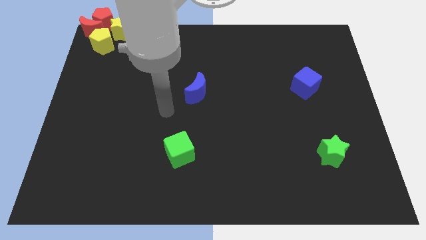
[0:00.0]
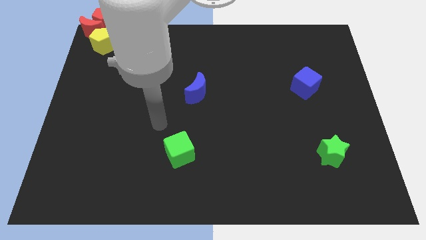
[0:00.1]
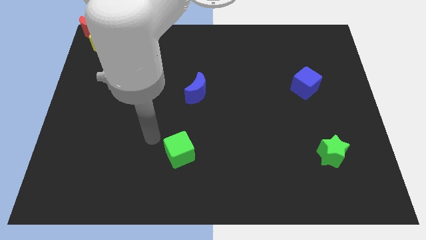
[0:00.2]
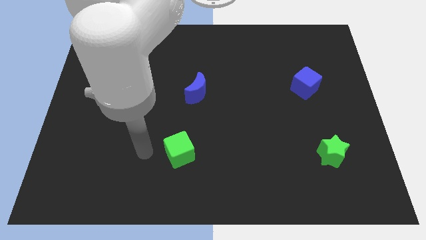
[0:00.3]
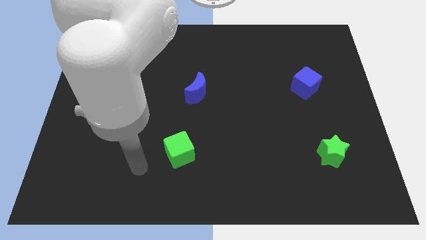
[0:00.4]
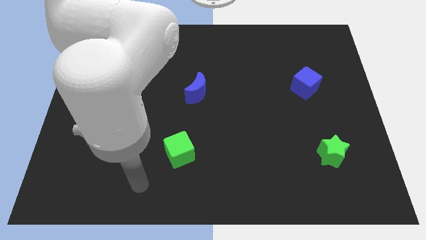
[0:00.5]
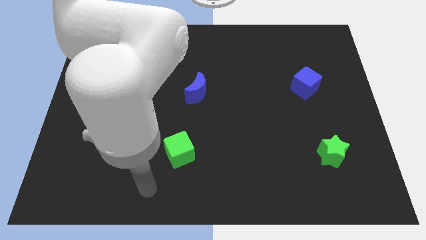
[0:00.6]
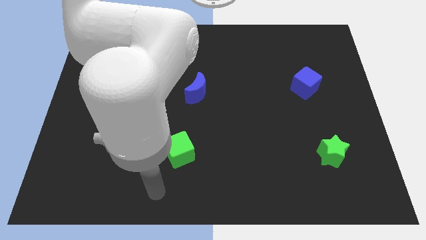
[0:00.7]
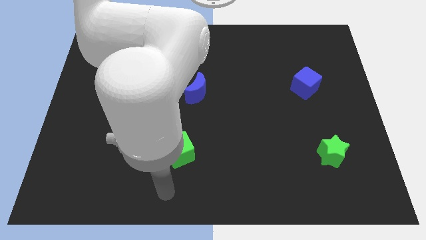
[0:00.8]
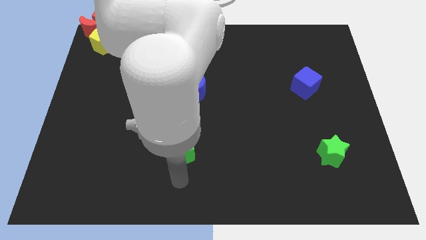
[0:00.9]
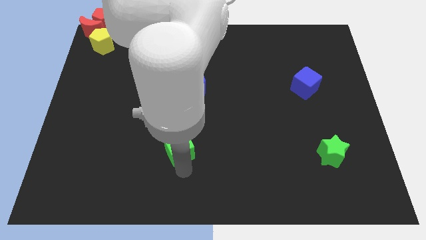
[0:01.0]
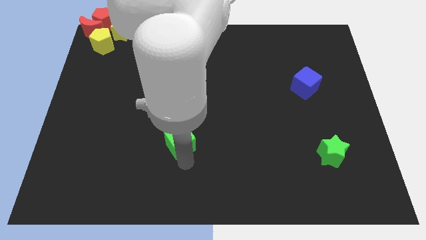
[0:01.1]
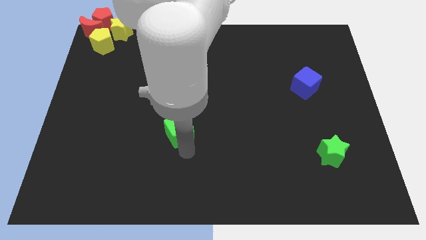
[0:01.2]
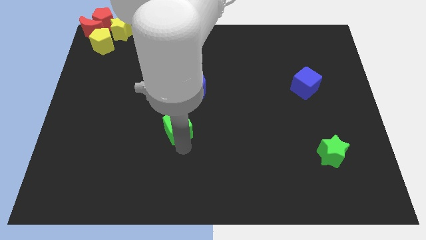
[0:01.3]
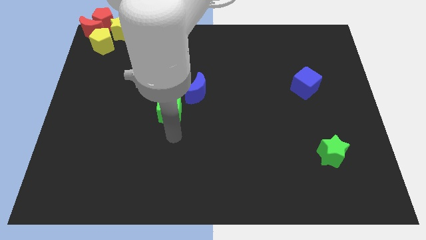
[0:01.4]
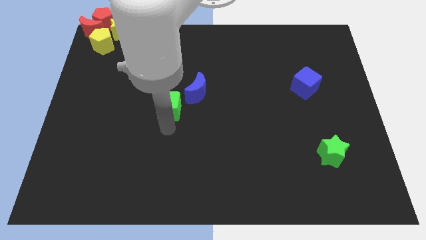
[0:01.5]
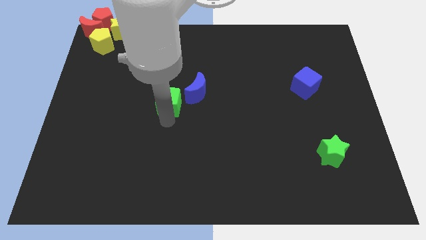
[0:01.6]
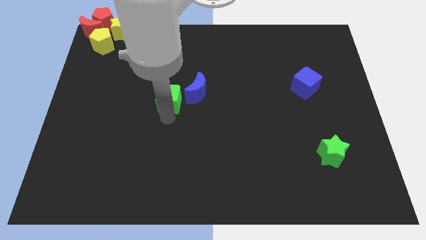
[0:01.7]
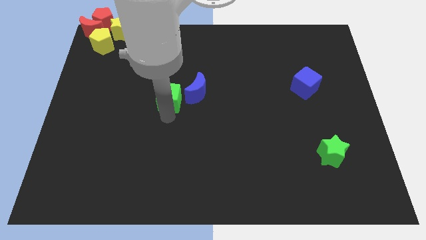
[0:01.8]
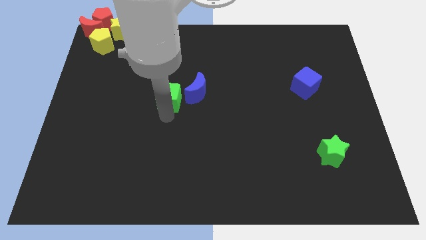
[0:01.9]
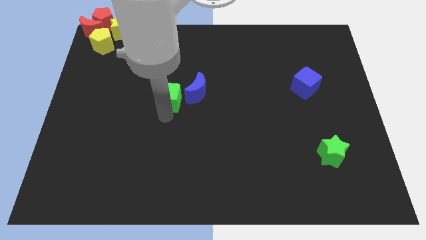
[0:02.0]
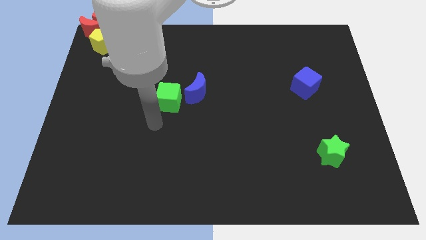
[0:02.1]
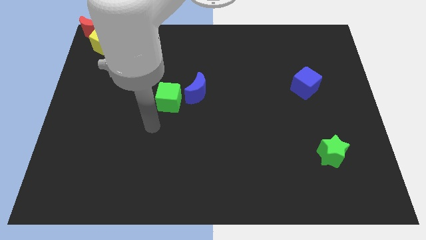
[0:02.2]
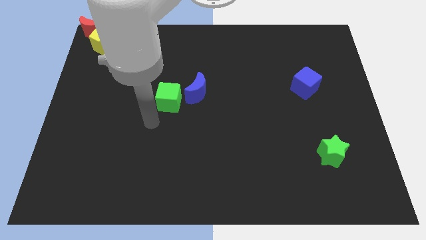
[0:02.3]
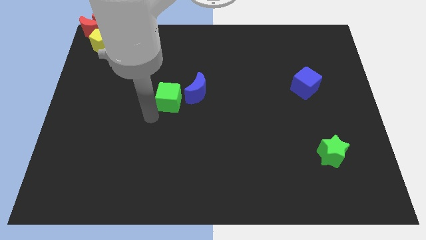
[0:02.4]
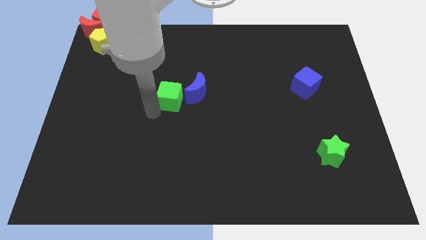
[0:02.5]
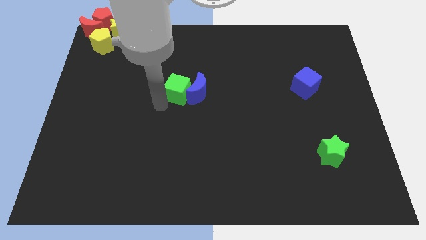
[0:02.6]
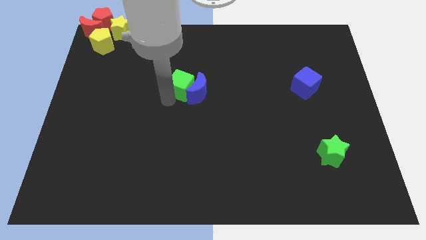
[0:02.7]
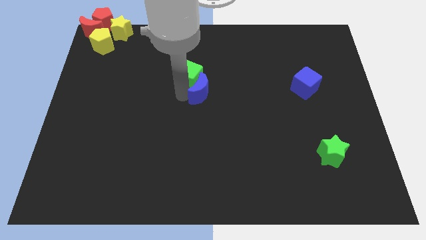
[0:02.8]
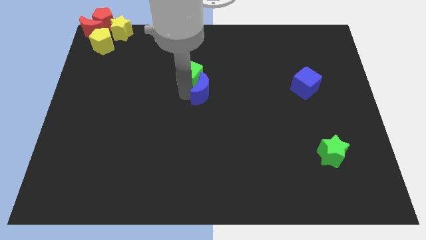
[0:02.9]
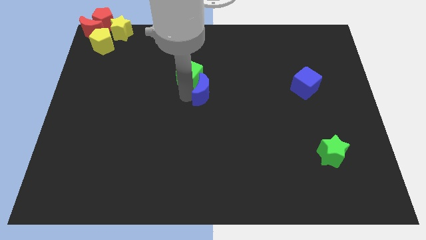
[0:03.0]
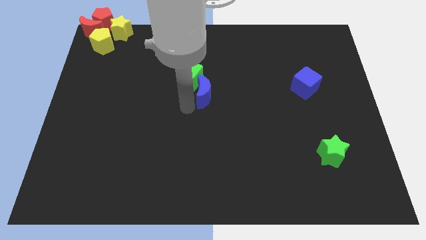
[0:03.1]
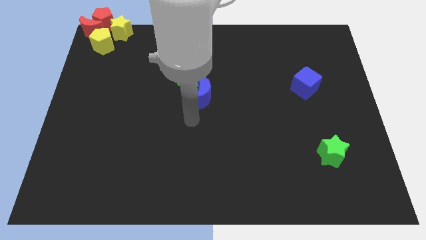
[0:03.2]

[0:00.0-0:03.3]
push the green cube into the blue crescent

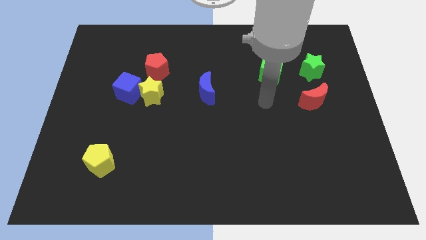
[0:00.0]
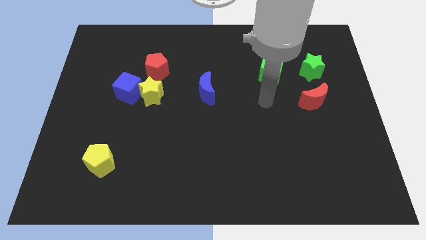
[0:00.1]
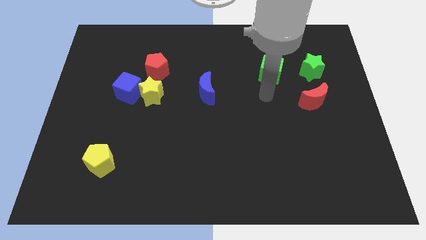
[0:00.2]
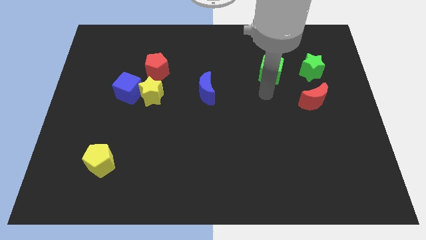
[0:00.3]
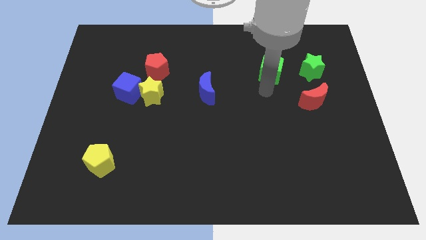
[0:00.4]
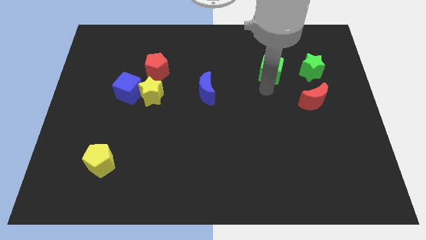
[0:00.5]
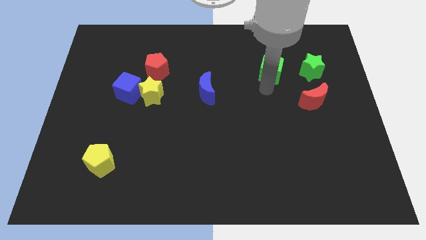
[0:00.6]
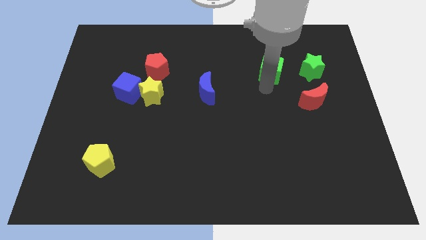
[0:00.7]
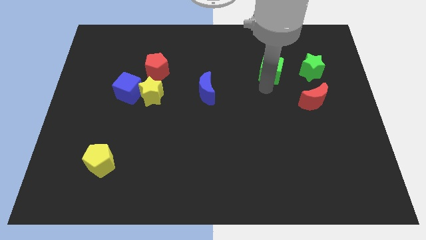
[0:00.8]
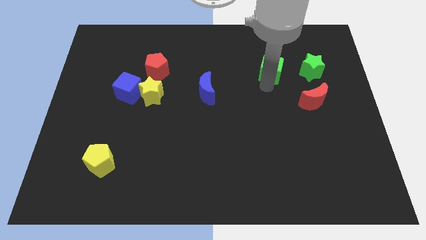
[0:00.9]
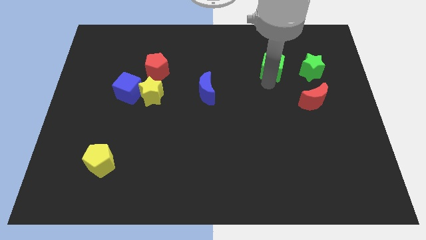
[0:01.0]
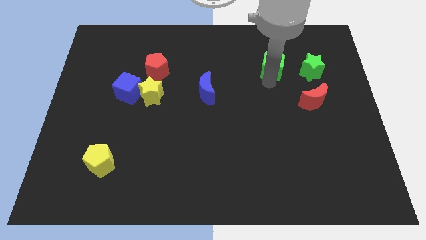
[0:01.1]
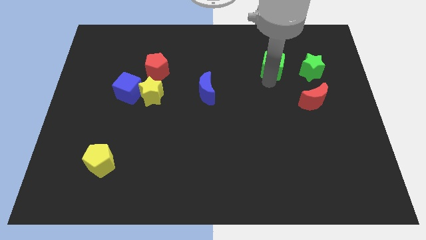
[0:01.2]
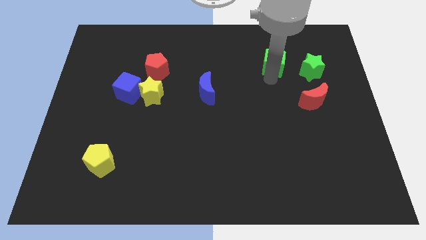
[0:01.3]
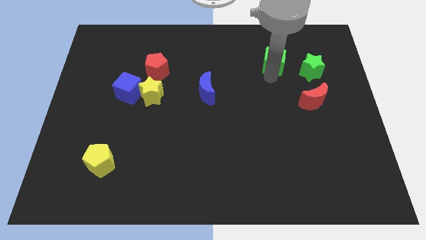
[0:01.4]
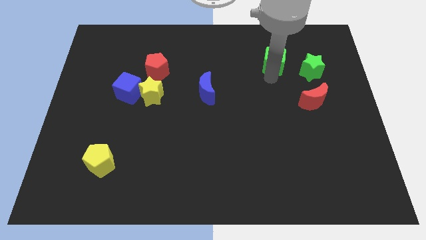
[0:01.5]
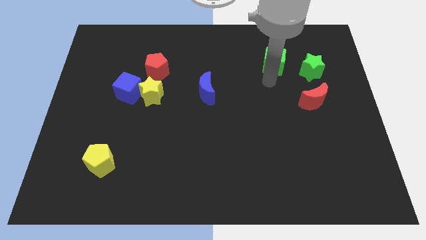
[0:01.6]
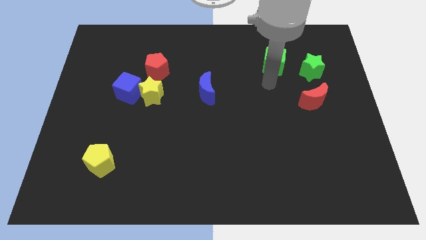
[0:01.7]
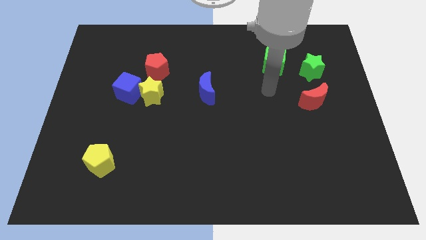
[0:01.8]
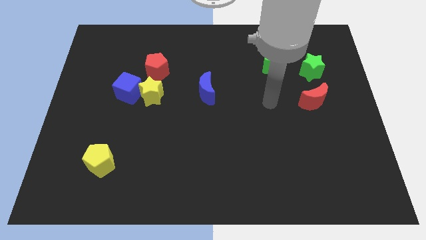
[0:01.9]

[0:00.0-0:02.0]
slide the green cube diagonal to the red moon

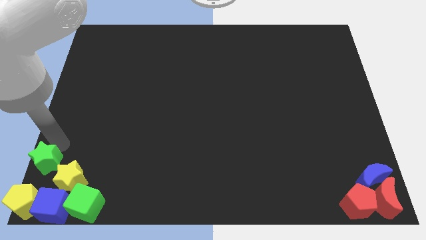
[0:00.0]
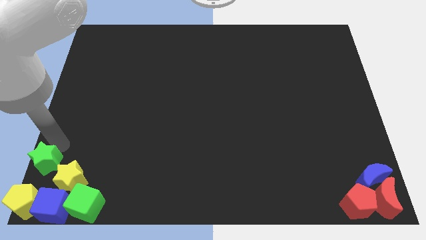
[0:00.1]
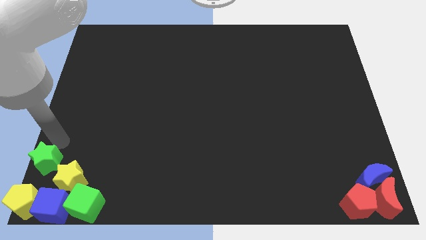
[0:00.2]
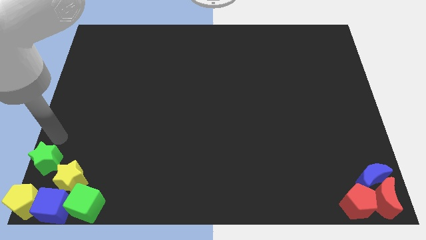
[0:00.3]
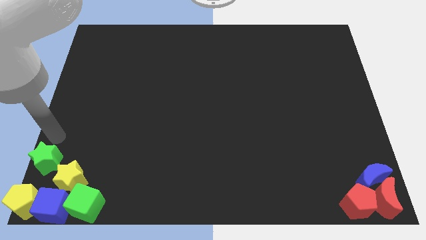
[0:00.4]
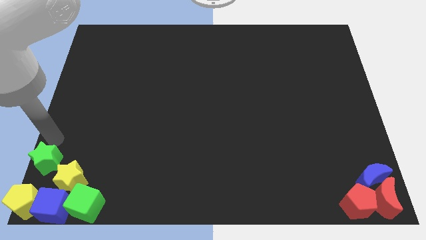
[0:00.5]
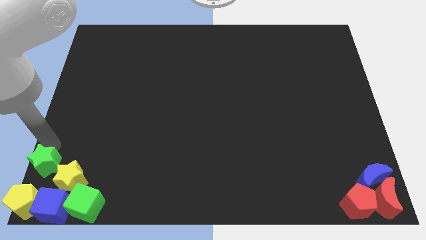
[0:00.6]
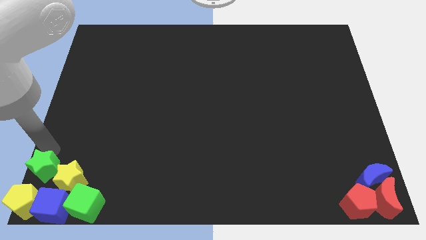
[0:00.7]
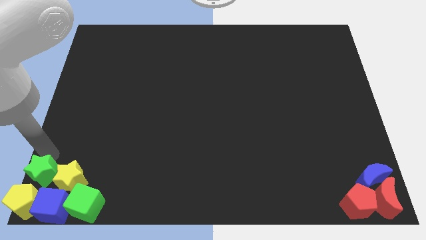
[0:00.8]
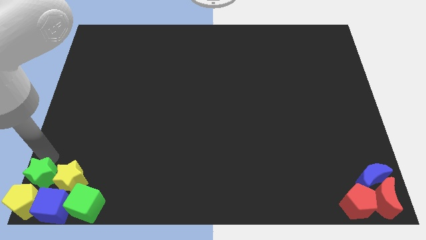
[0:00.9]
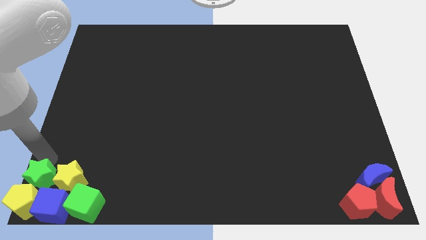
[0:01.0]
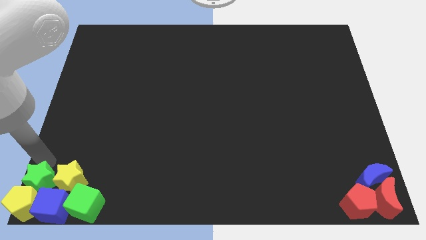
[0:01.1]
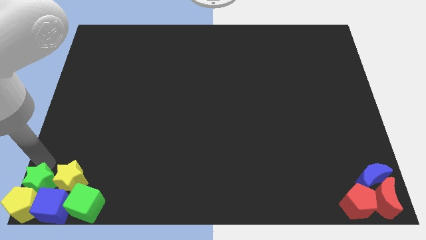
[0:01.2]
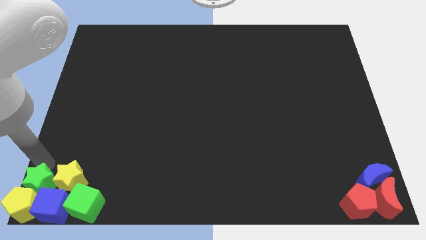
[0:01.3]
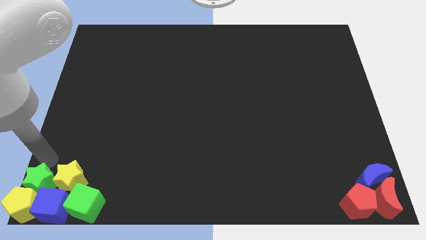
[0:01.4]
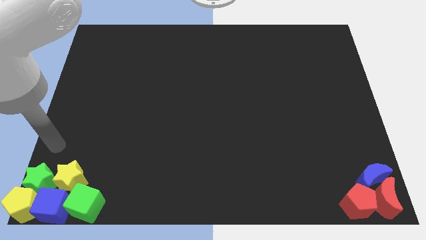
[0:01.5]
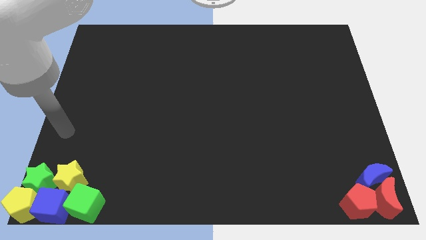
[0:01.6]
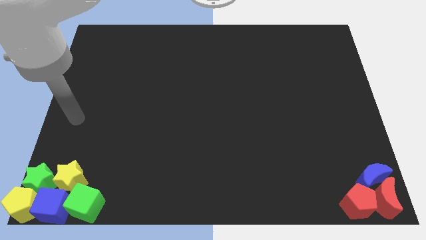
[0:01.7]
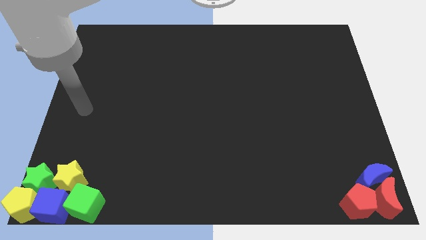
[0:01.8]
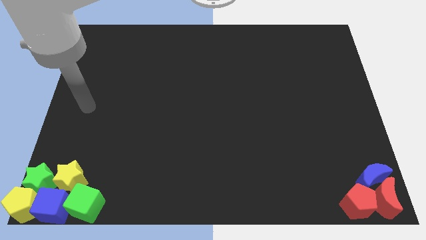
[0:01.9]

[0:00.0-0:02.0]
move the green star towards the top of the yellow pentagon

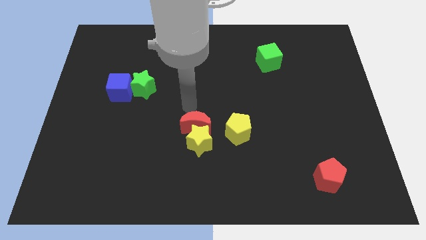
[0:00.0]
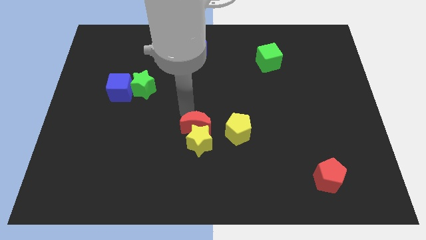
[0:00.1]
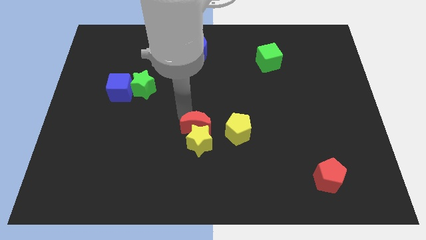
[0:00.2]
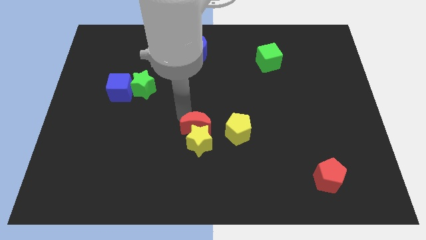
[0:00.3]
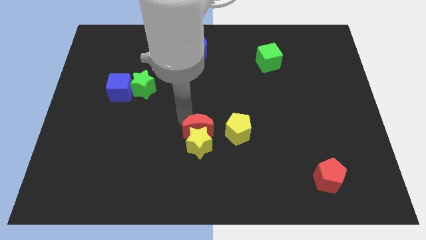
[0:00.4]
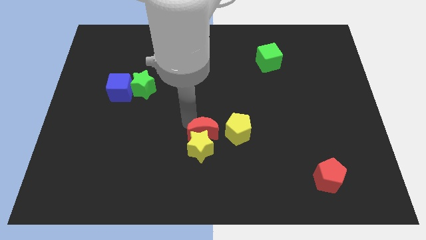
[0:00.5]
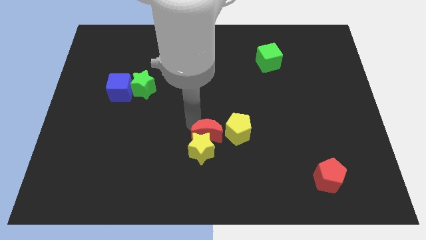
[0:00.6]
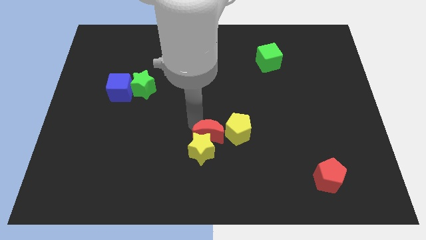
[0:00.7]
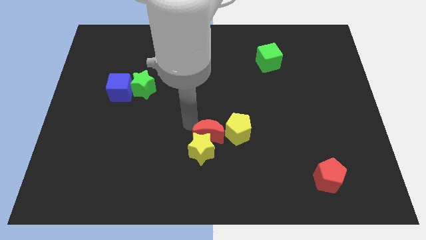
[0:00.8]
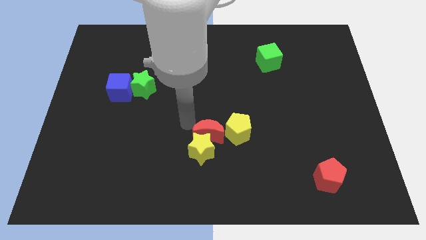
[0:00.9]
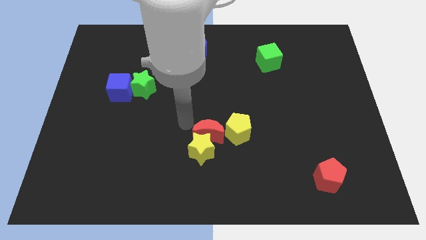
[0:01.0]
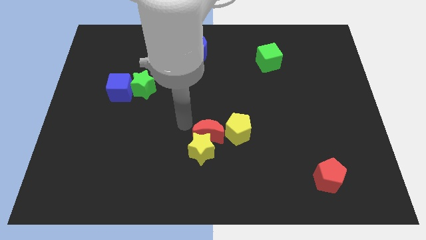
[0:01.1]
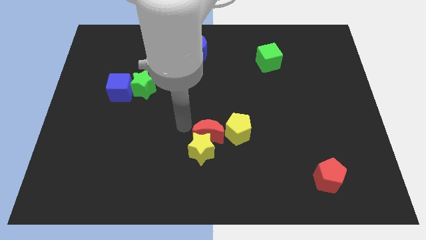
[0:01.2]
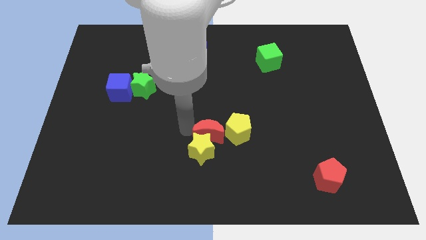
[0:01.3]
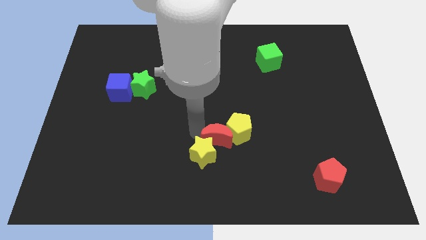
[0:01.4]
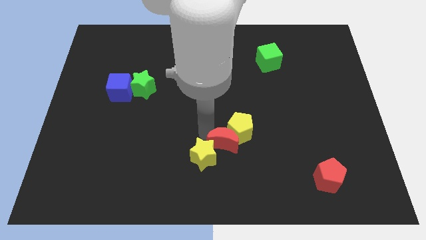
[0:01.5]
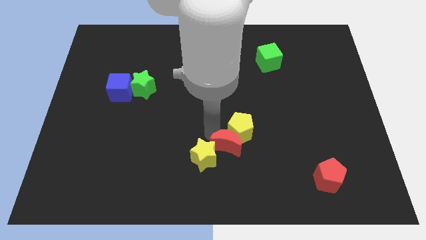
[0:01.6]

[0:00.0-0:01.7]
place the red crescent in between the yellow blocks
